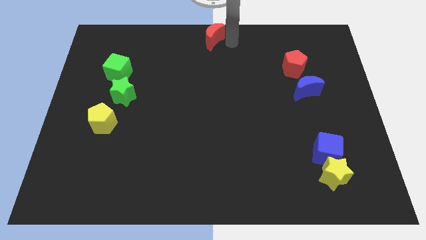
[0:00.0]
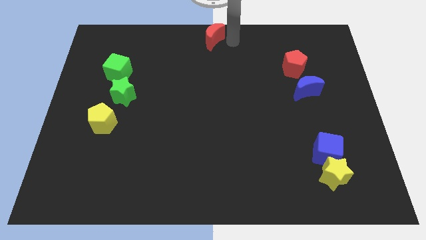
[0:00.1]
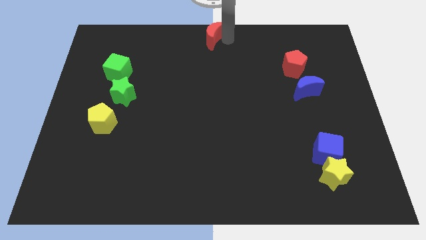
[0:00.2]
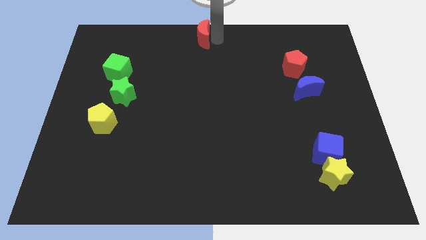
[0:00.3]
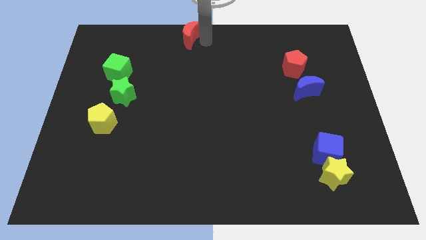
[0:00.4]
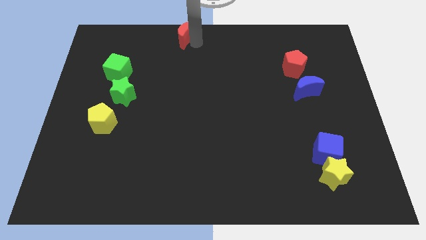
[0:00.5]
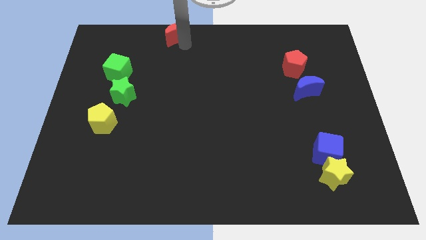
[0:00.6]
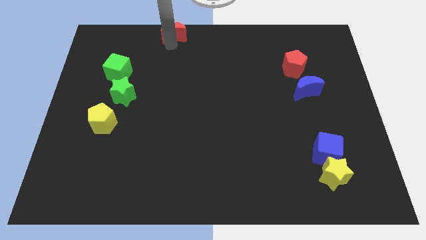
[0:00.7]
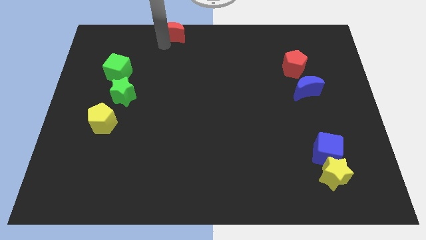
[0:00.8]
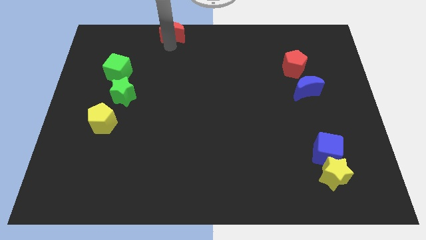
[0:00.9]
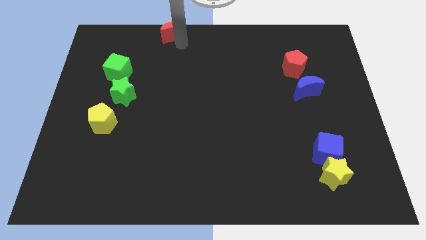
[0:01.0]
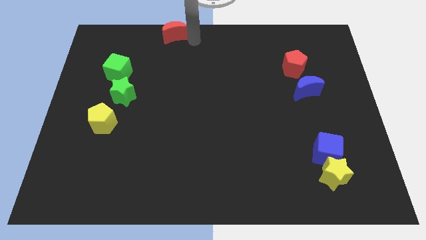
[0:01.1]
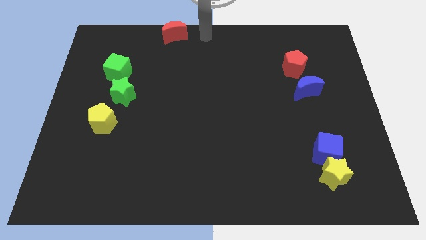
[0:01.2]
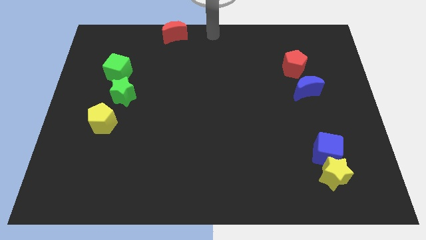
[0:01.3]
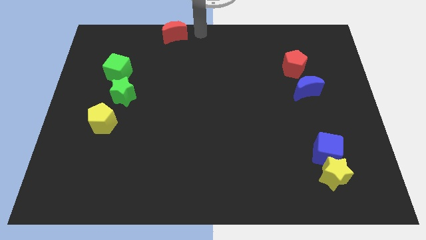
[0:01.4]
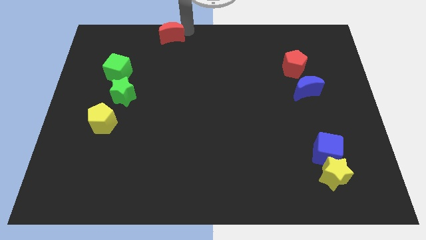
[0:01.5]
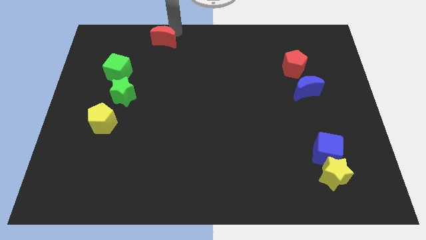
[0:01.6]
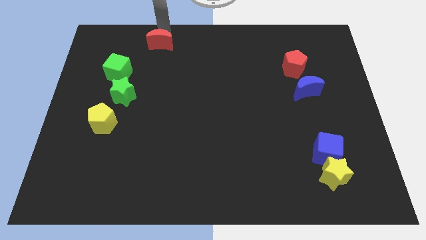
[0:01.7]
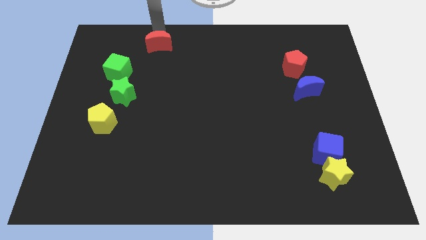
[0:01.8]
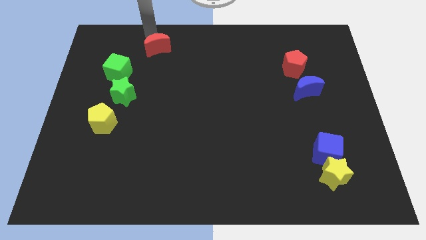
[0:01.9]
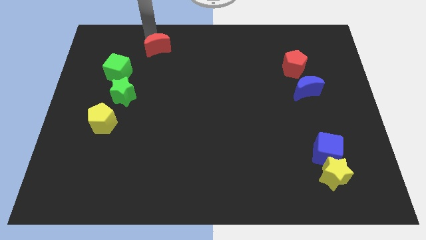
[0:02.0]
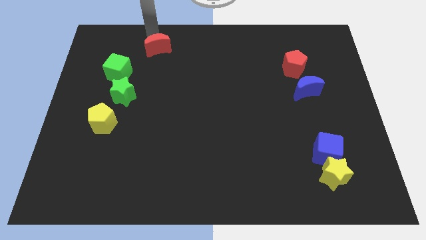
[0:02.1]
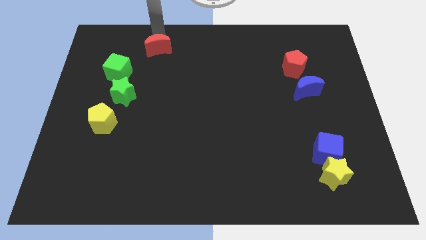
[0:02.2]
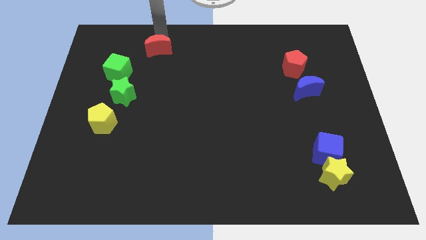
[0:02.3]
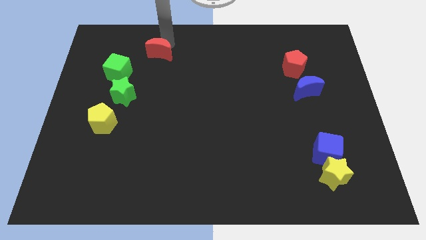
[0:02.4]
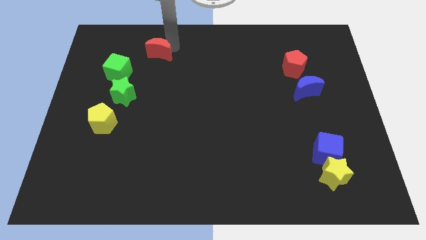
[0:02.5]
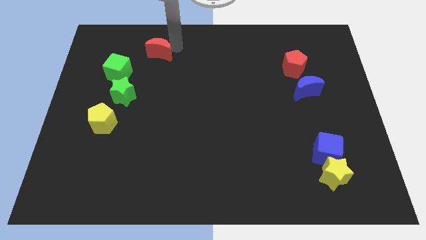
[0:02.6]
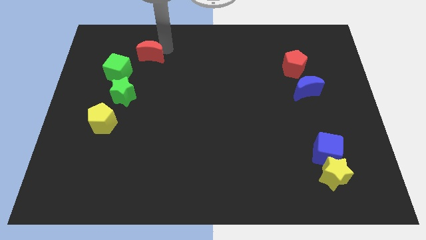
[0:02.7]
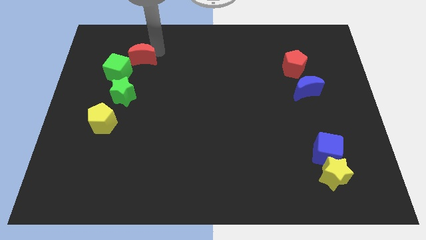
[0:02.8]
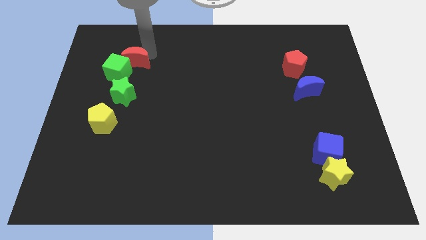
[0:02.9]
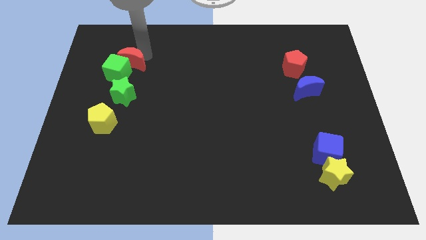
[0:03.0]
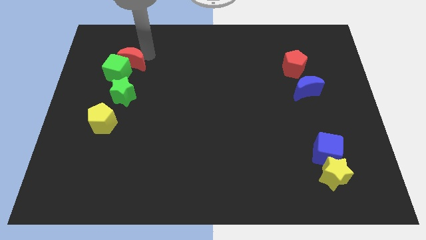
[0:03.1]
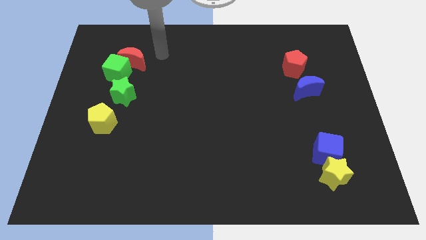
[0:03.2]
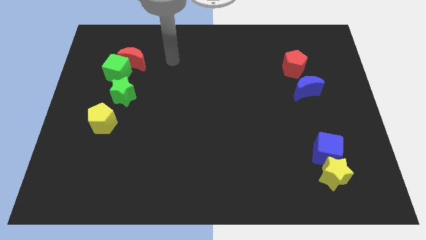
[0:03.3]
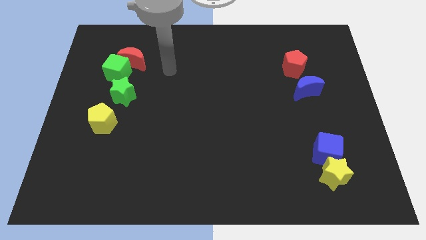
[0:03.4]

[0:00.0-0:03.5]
push the red moon into green cube

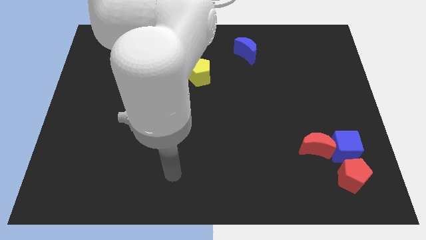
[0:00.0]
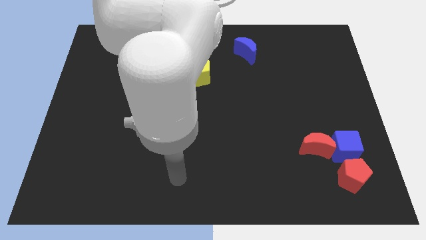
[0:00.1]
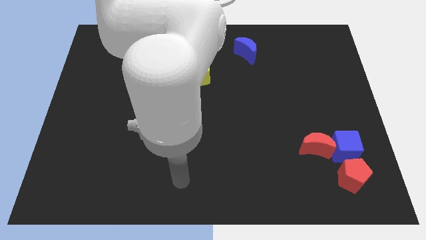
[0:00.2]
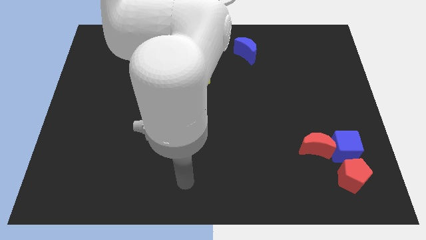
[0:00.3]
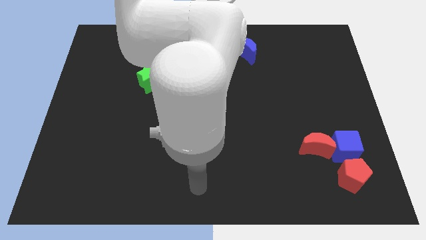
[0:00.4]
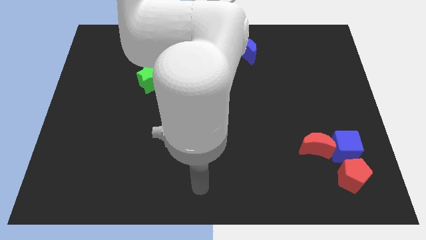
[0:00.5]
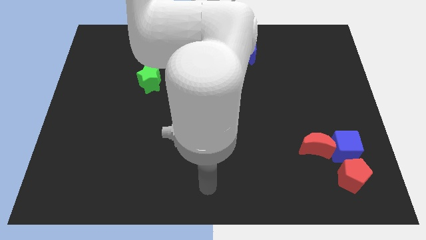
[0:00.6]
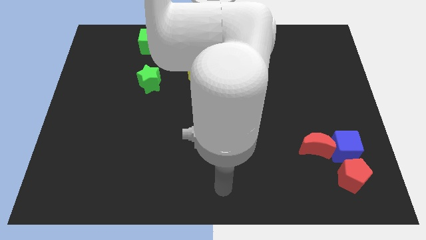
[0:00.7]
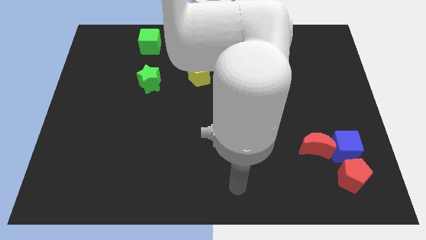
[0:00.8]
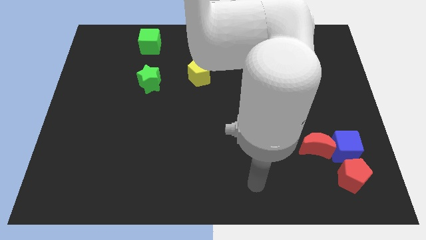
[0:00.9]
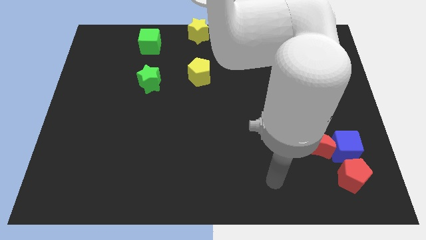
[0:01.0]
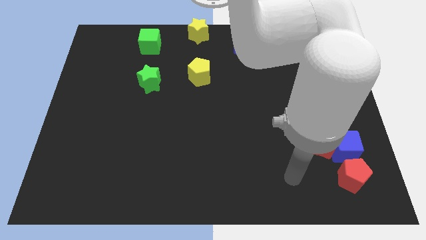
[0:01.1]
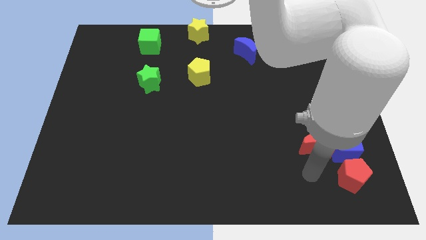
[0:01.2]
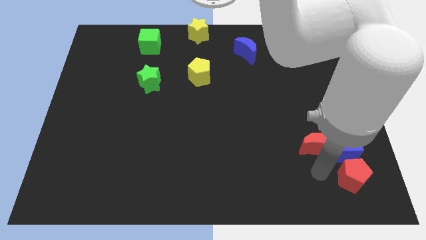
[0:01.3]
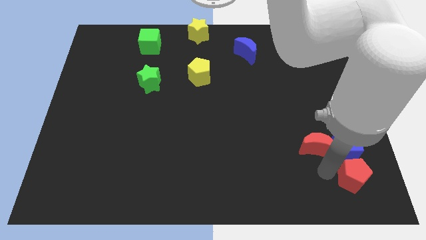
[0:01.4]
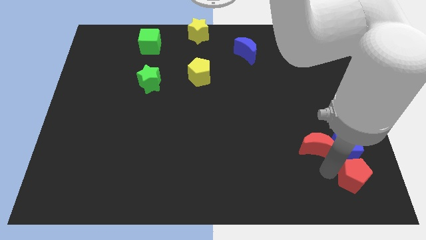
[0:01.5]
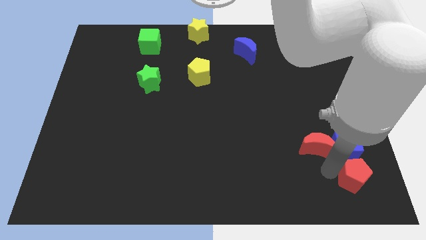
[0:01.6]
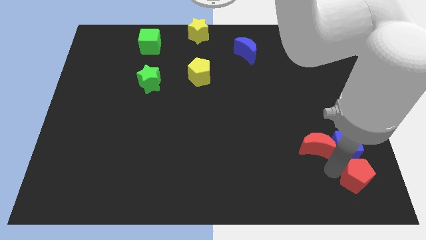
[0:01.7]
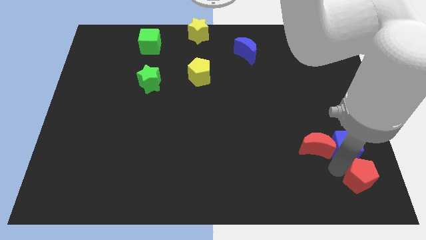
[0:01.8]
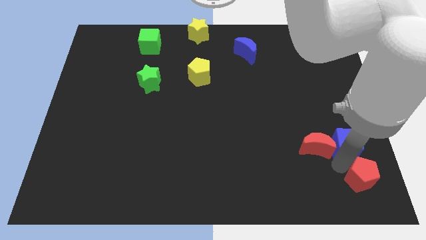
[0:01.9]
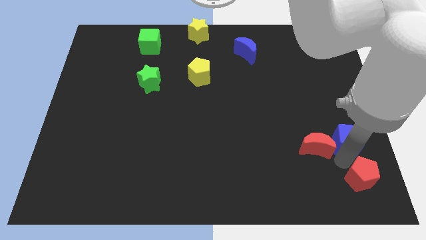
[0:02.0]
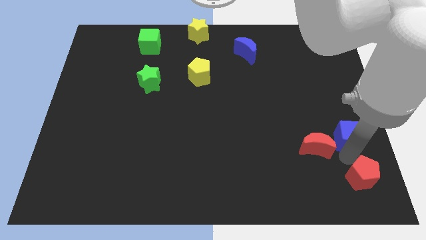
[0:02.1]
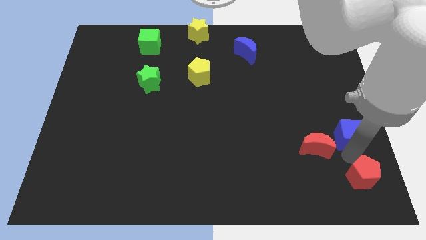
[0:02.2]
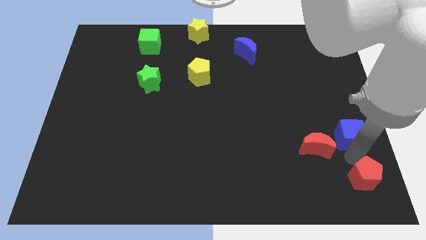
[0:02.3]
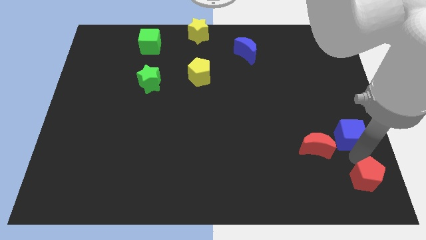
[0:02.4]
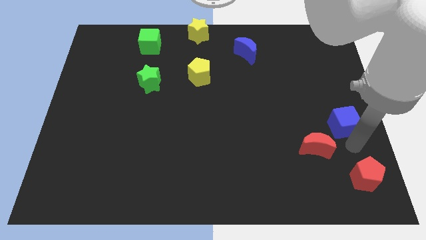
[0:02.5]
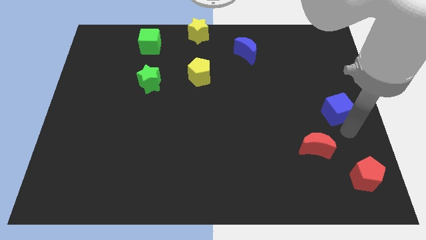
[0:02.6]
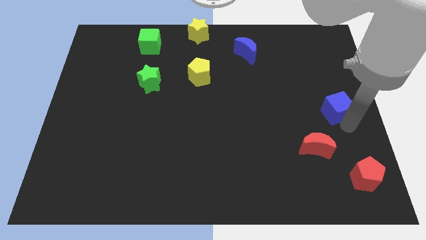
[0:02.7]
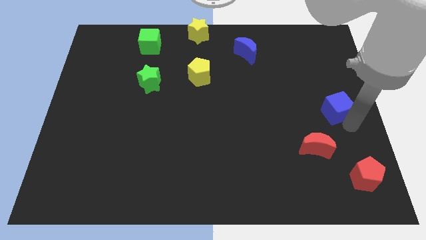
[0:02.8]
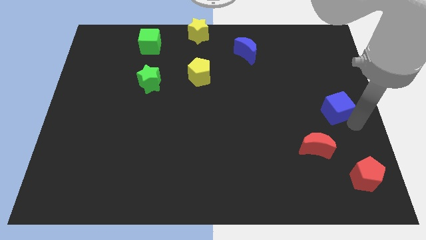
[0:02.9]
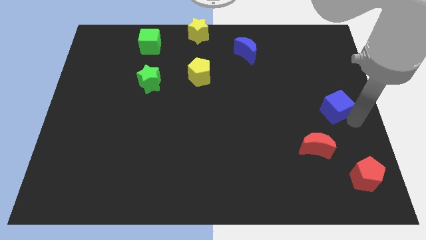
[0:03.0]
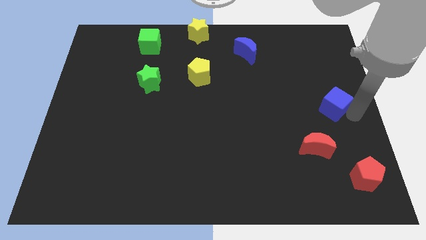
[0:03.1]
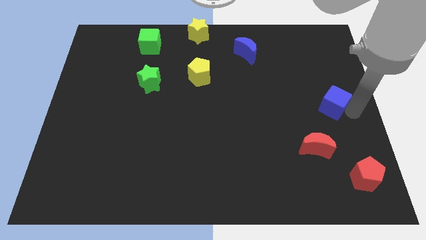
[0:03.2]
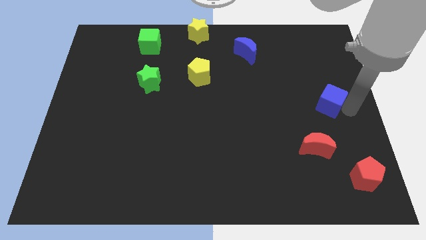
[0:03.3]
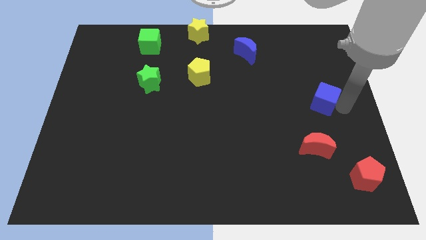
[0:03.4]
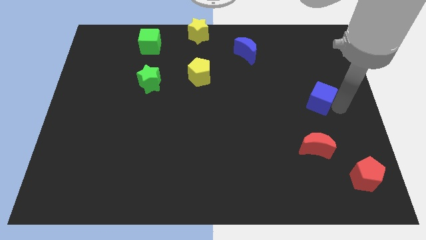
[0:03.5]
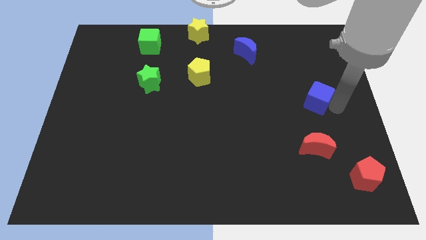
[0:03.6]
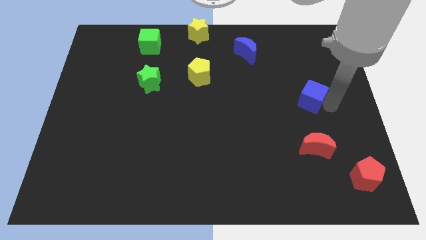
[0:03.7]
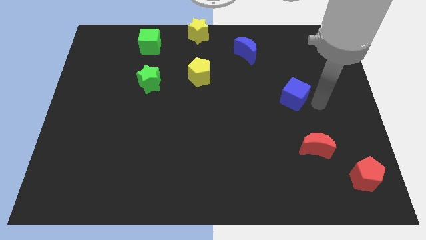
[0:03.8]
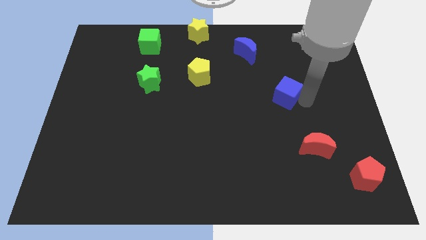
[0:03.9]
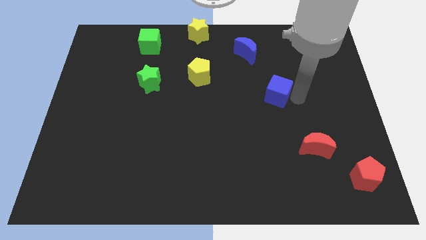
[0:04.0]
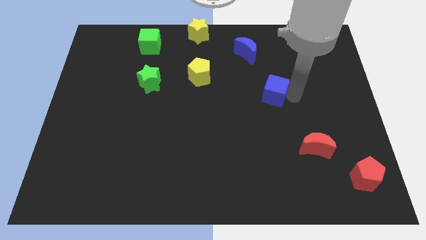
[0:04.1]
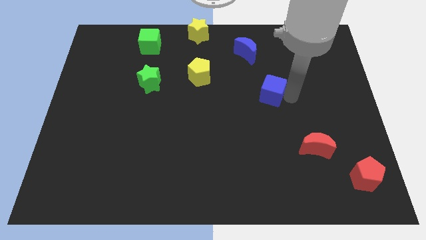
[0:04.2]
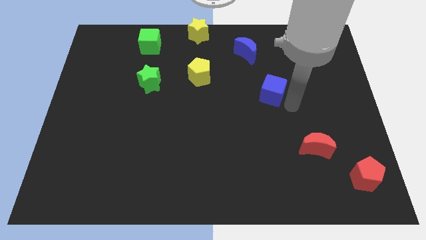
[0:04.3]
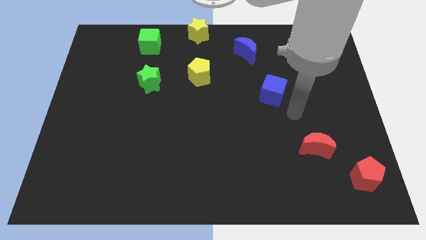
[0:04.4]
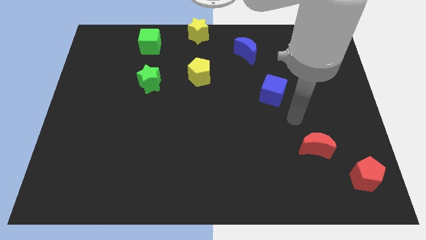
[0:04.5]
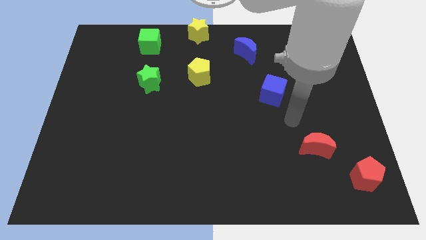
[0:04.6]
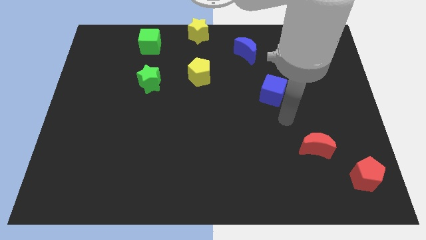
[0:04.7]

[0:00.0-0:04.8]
separate the blue cube from the group of blocks

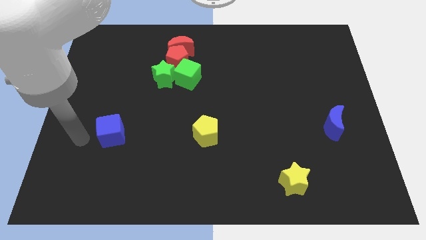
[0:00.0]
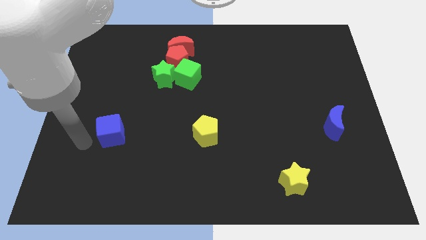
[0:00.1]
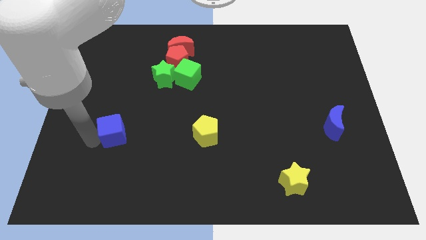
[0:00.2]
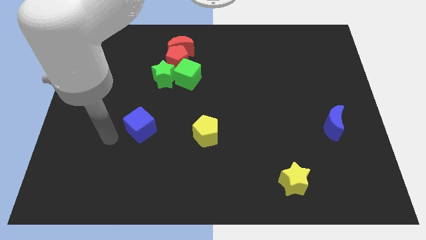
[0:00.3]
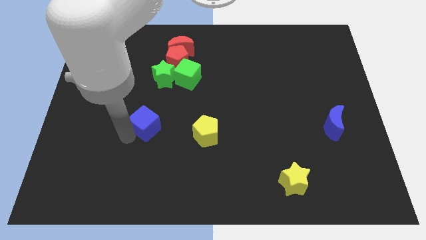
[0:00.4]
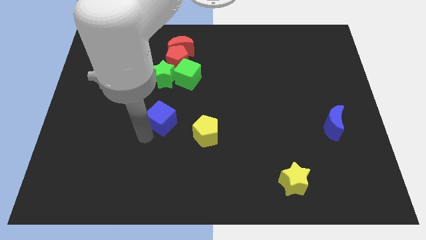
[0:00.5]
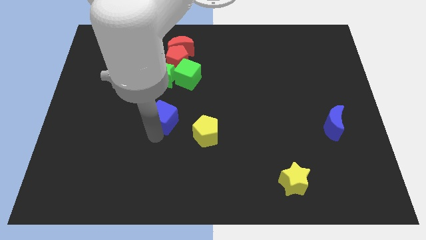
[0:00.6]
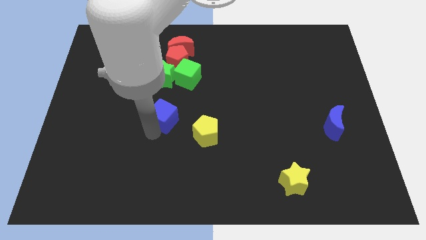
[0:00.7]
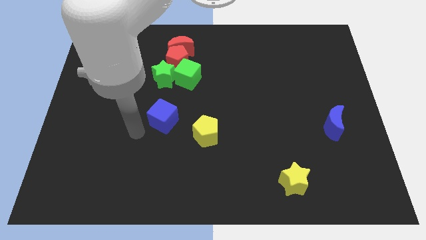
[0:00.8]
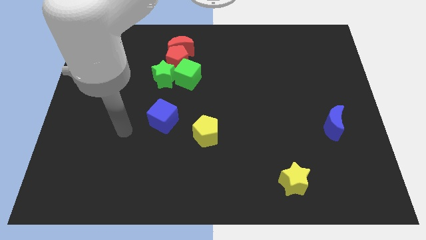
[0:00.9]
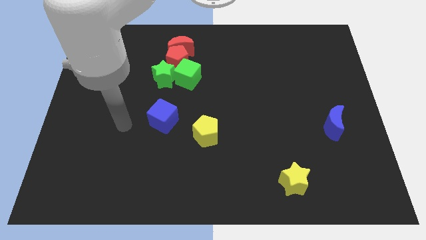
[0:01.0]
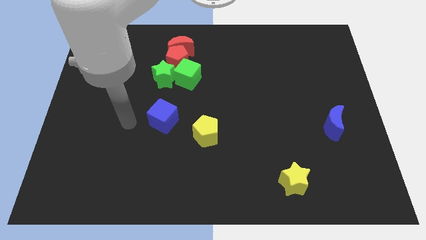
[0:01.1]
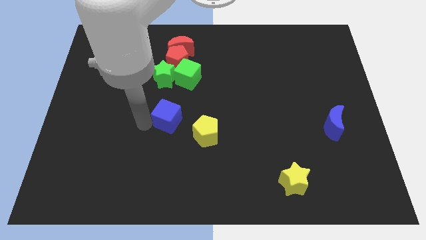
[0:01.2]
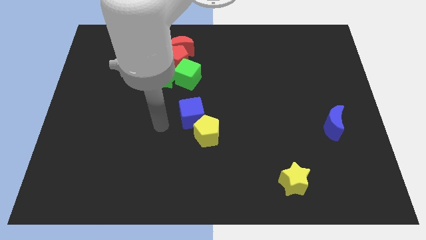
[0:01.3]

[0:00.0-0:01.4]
place the blue cube below the green blocks
